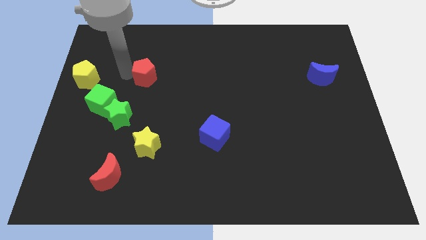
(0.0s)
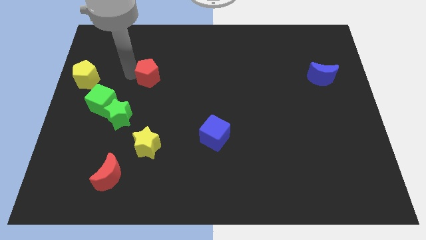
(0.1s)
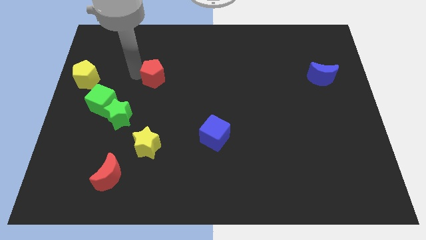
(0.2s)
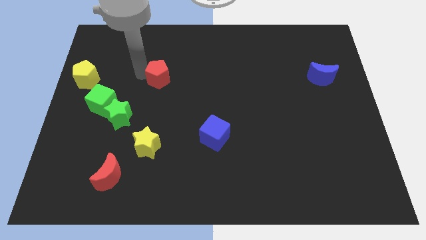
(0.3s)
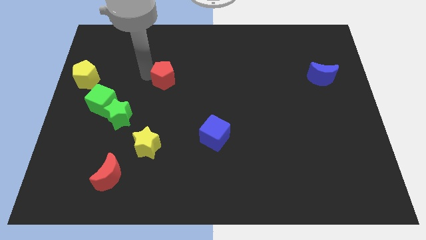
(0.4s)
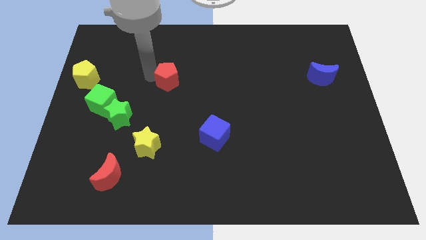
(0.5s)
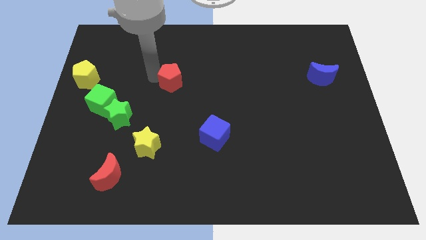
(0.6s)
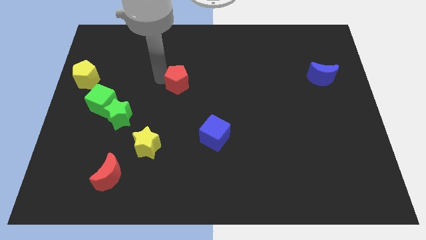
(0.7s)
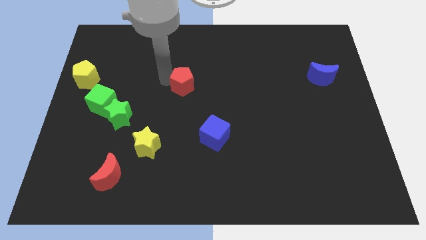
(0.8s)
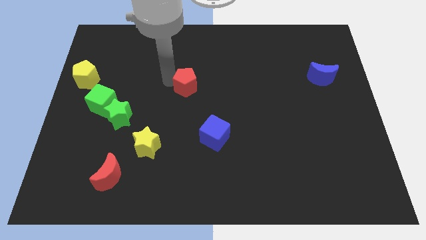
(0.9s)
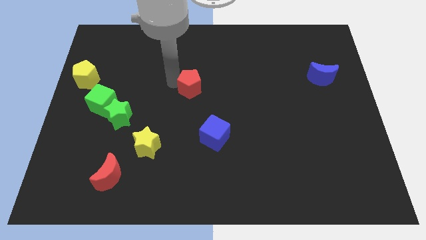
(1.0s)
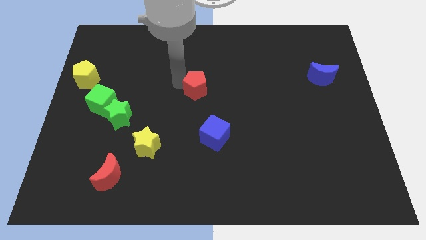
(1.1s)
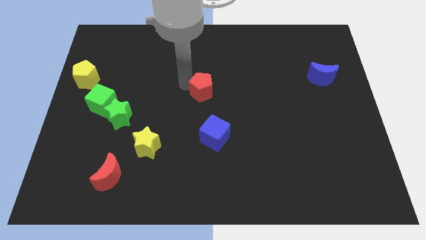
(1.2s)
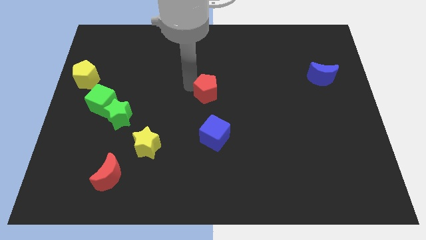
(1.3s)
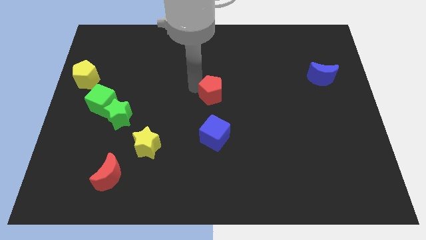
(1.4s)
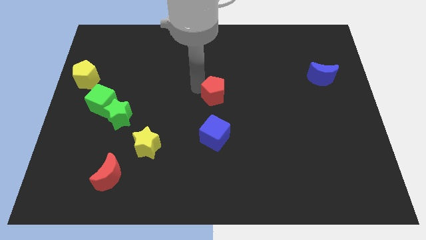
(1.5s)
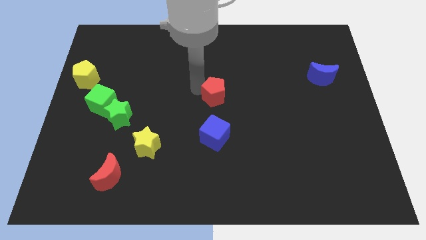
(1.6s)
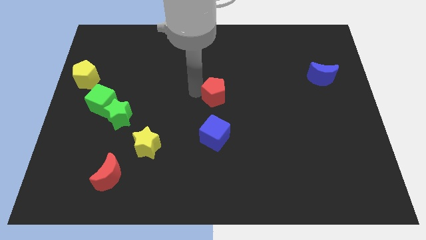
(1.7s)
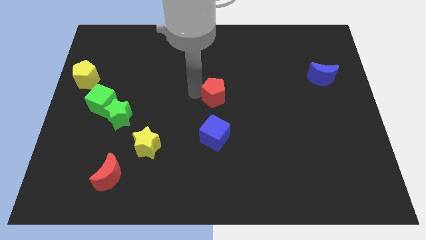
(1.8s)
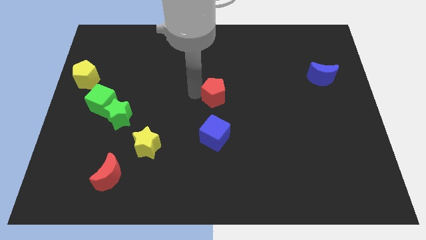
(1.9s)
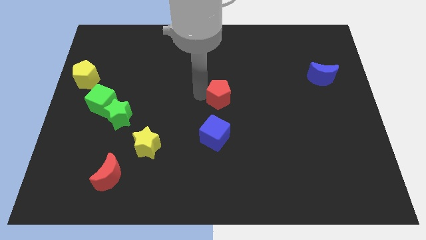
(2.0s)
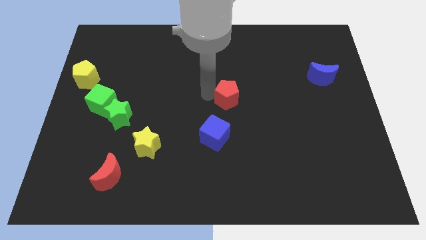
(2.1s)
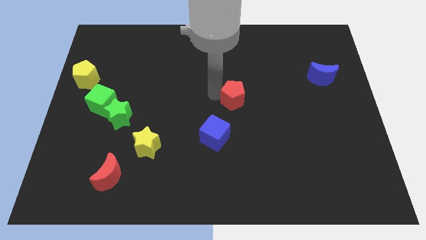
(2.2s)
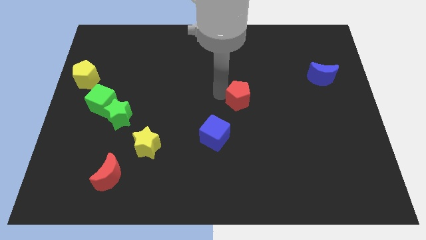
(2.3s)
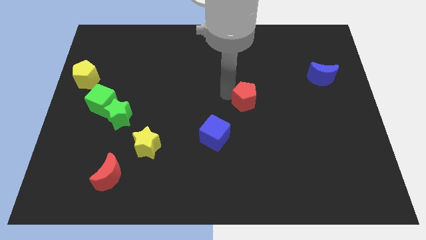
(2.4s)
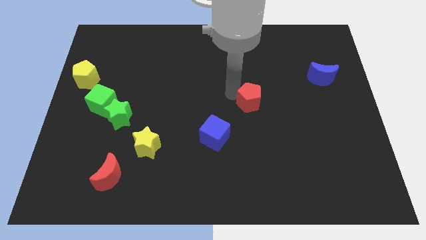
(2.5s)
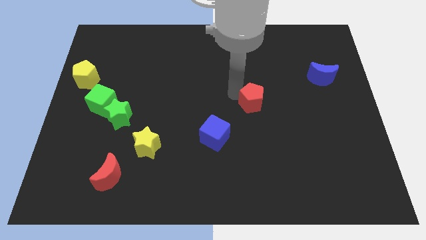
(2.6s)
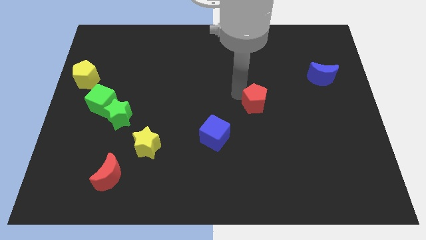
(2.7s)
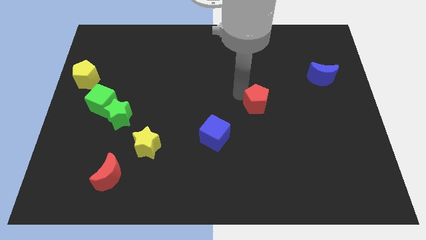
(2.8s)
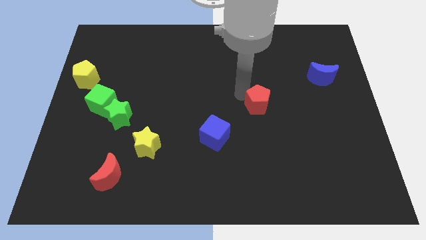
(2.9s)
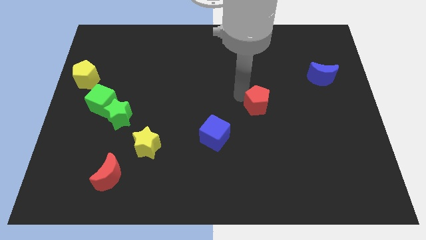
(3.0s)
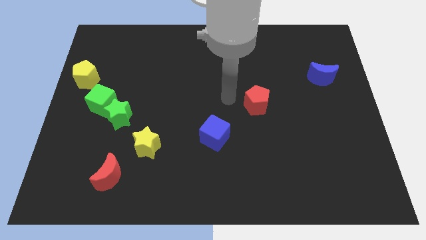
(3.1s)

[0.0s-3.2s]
place red pentagon between blue crescent and cube

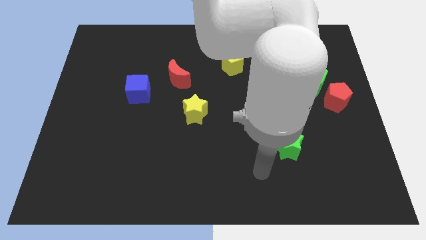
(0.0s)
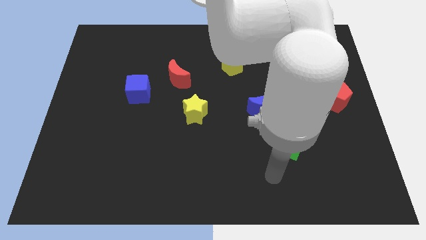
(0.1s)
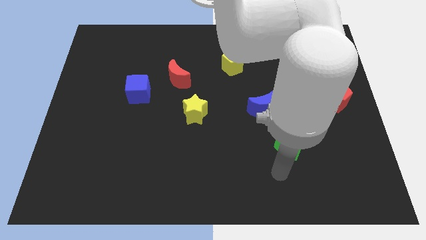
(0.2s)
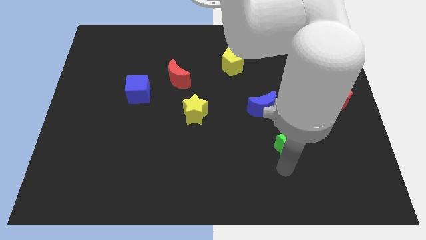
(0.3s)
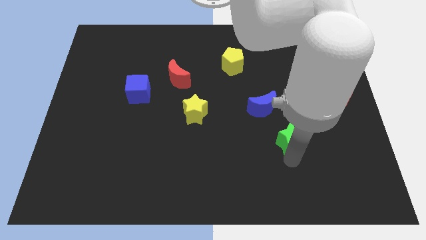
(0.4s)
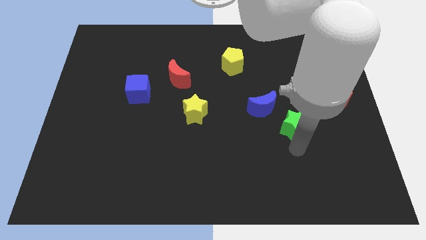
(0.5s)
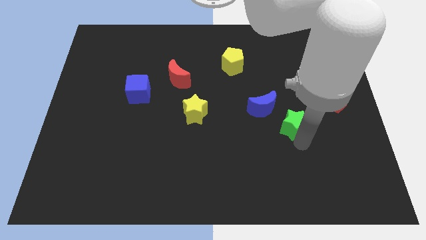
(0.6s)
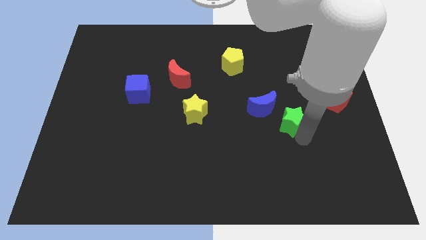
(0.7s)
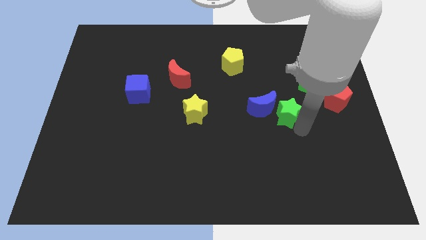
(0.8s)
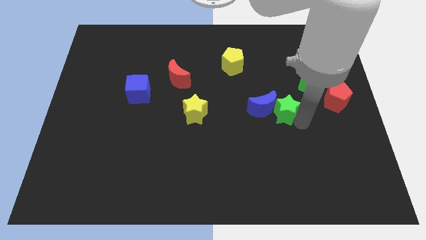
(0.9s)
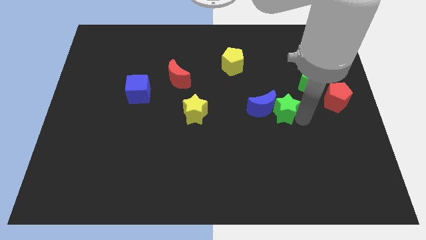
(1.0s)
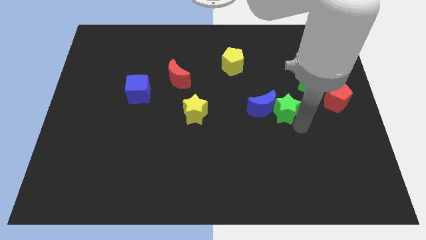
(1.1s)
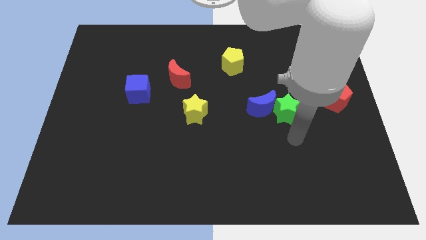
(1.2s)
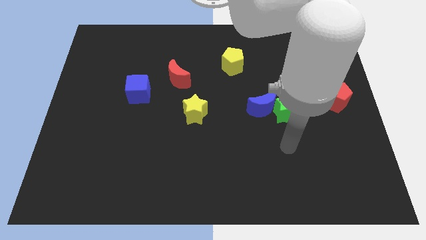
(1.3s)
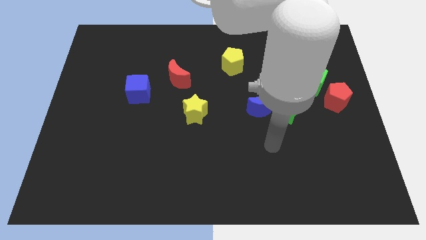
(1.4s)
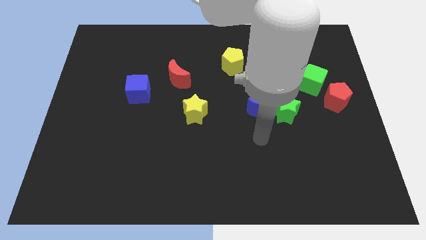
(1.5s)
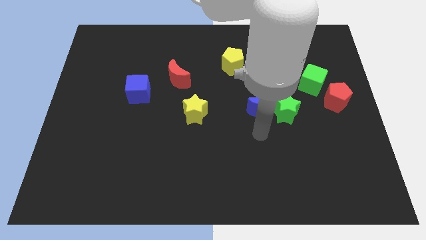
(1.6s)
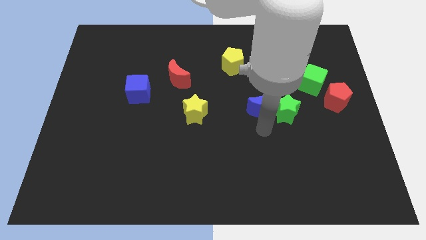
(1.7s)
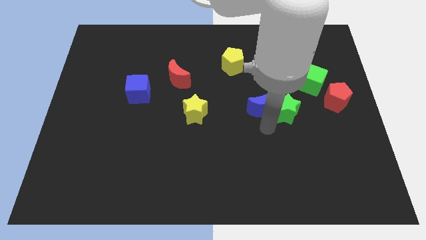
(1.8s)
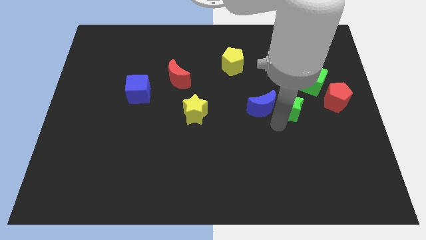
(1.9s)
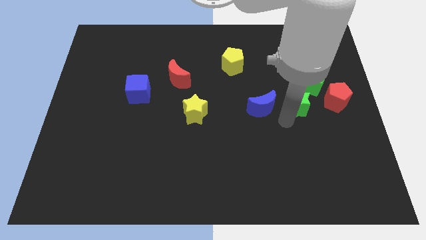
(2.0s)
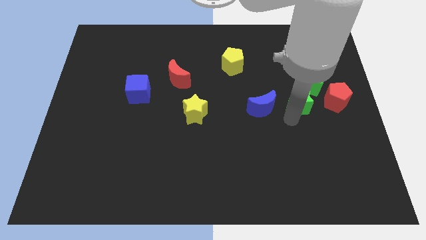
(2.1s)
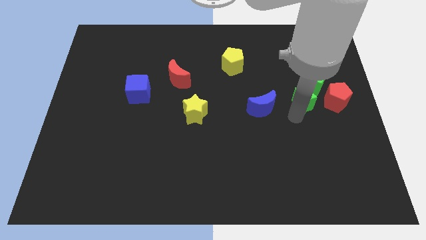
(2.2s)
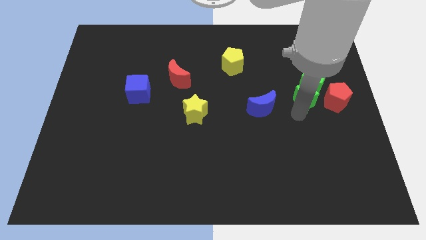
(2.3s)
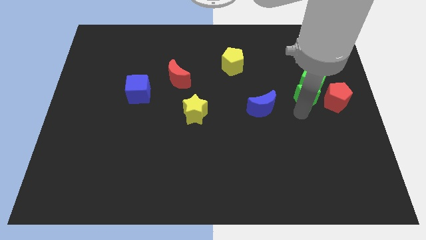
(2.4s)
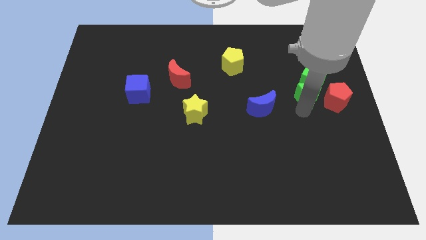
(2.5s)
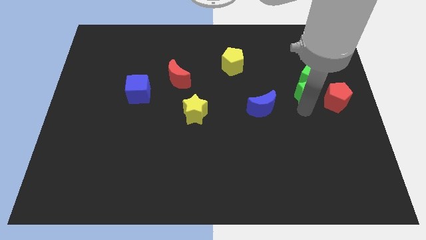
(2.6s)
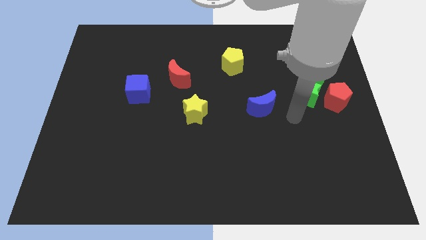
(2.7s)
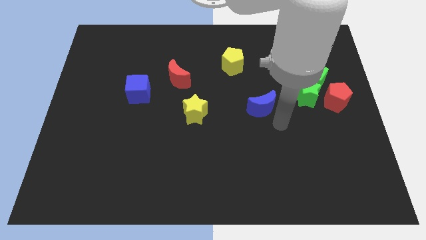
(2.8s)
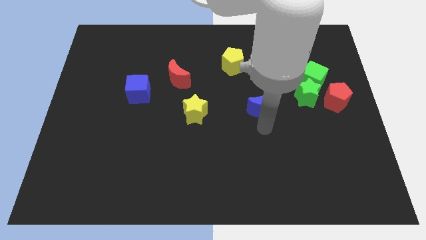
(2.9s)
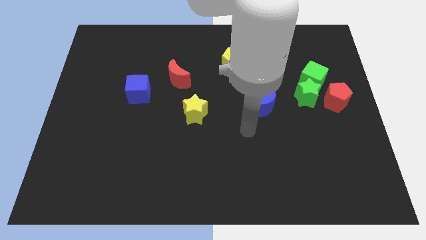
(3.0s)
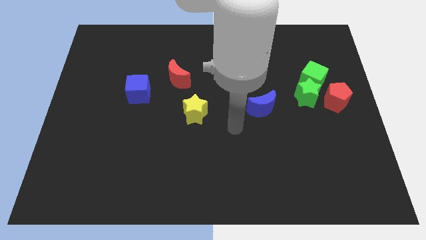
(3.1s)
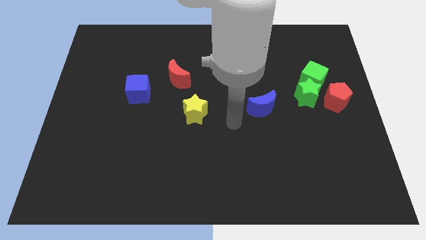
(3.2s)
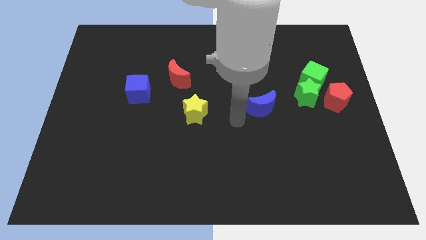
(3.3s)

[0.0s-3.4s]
place the green star under the green cube

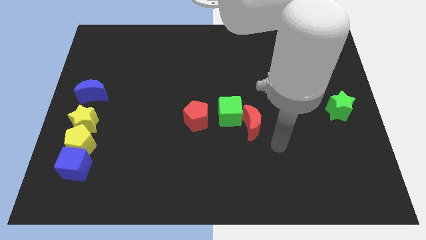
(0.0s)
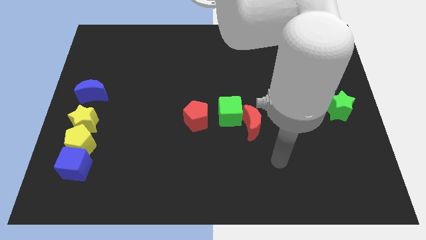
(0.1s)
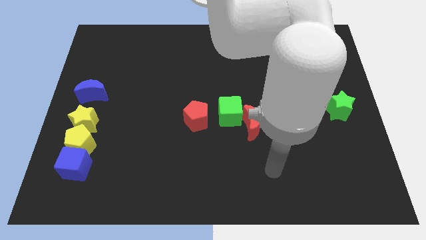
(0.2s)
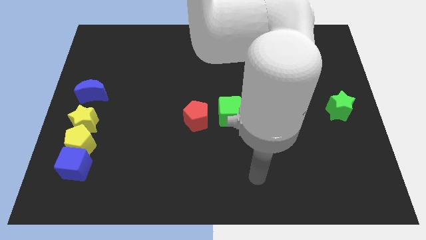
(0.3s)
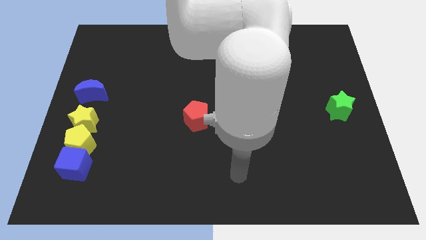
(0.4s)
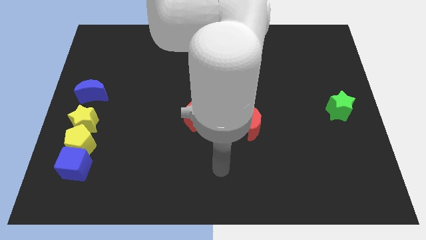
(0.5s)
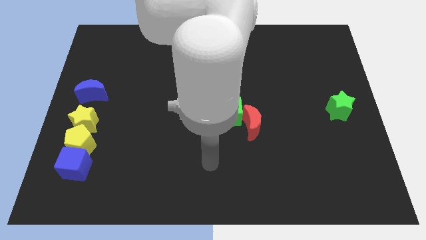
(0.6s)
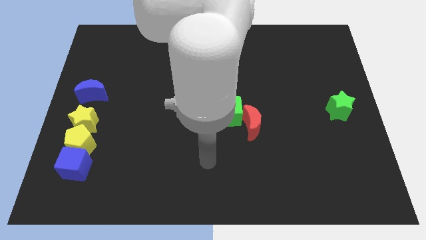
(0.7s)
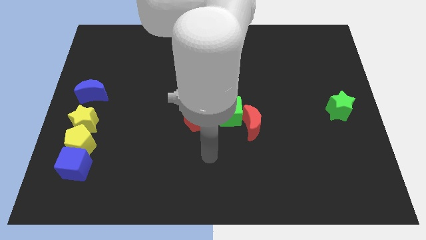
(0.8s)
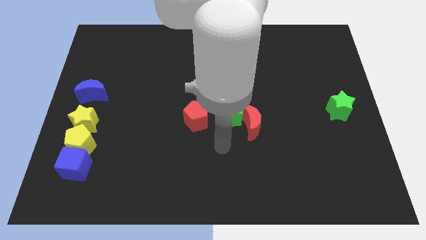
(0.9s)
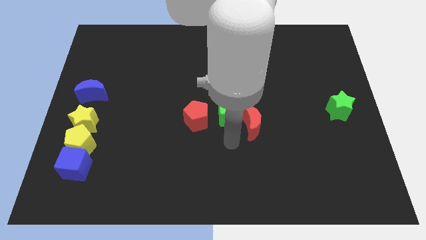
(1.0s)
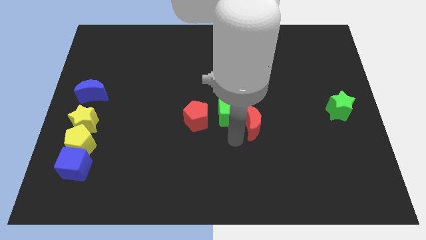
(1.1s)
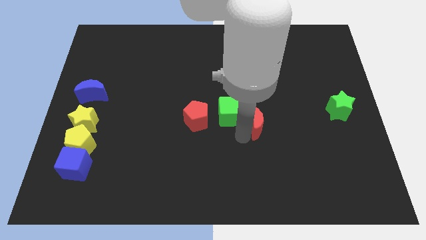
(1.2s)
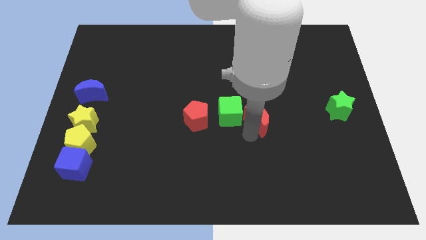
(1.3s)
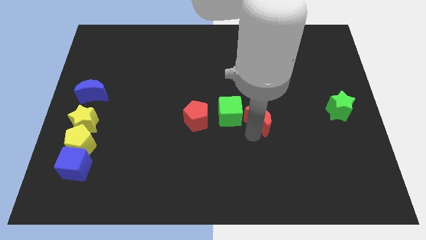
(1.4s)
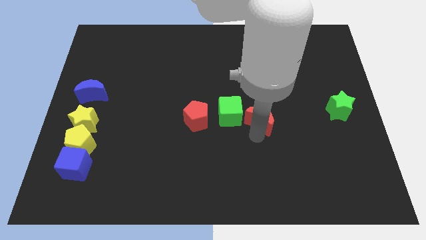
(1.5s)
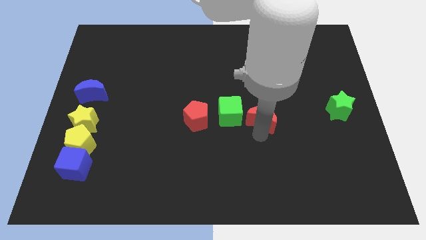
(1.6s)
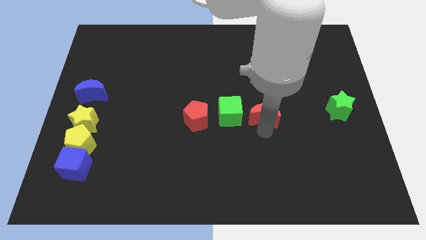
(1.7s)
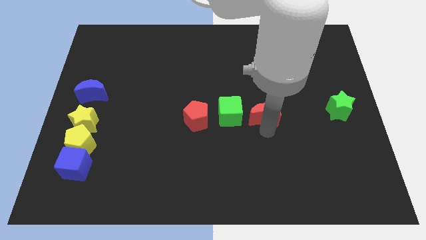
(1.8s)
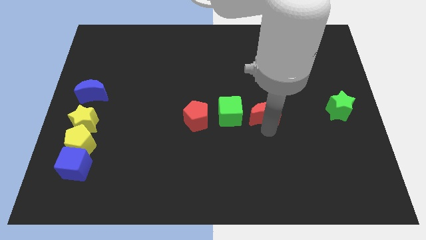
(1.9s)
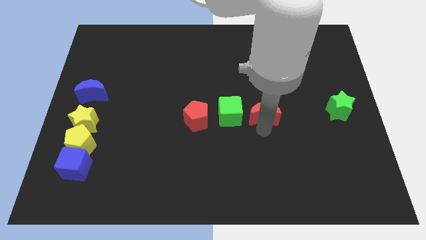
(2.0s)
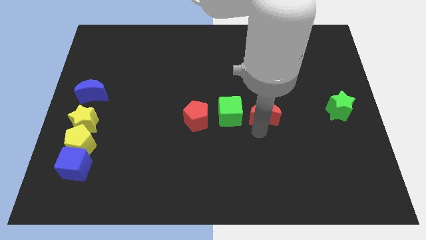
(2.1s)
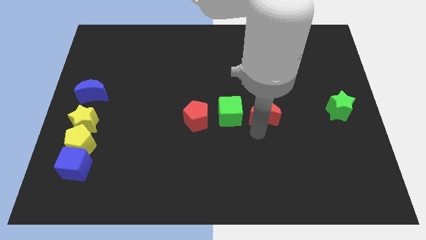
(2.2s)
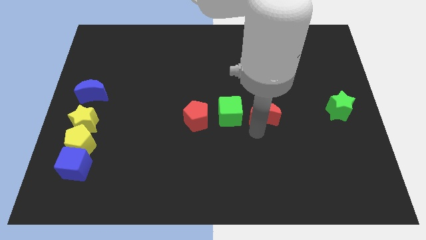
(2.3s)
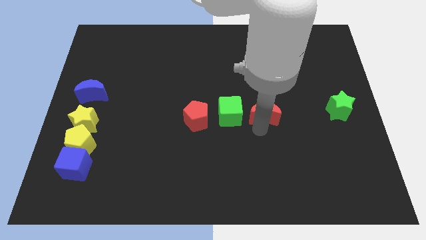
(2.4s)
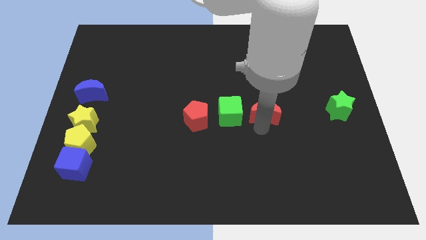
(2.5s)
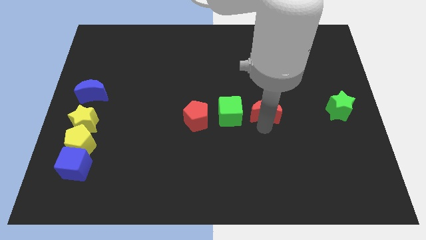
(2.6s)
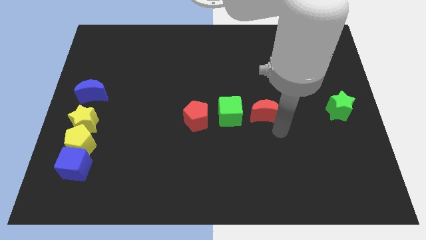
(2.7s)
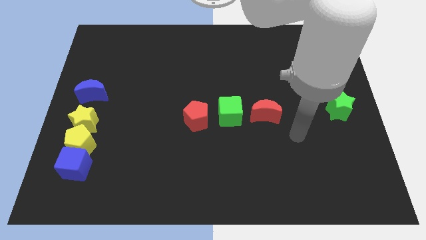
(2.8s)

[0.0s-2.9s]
adjust the red crescent horizontally right to the green cube
